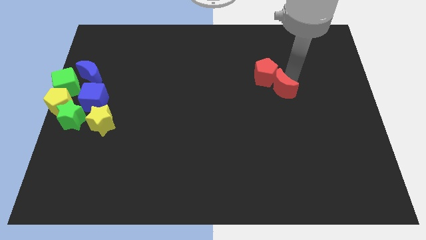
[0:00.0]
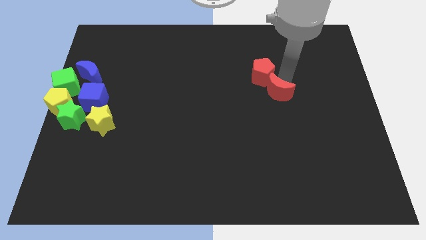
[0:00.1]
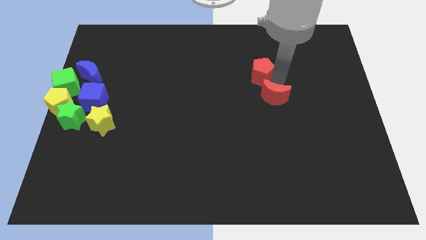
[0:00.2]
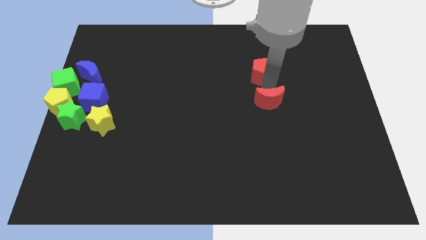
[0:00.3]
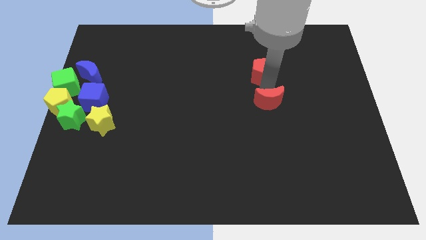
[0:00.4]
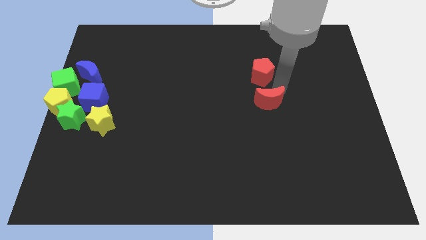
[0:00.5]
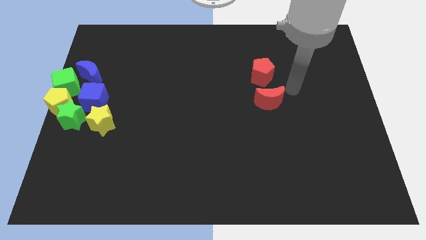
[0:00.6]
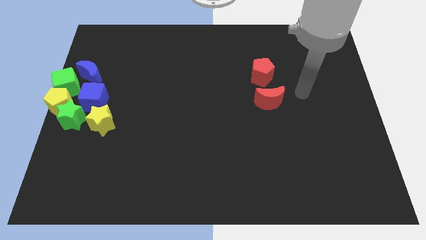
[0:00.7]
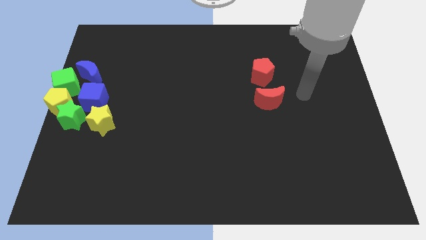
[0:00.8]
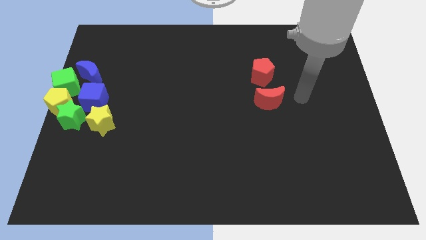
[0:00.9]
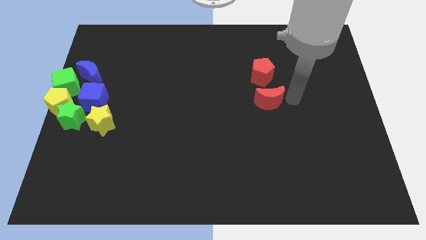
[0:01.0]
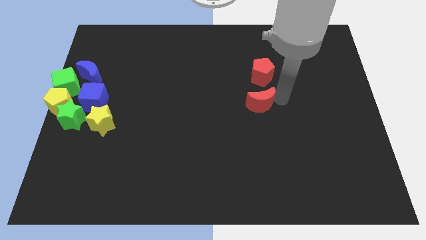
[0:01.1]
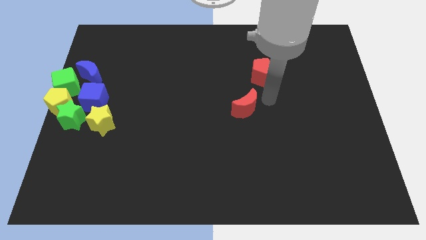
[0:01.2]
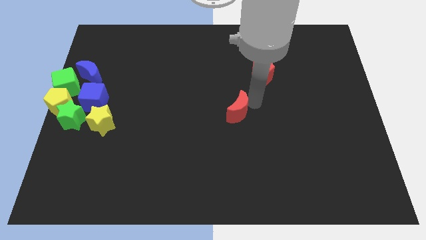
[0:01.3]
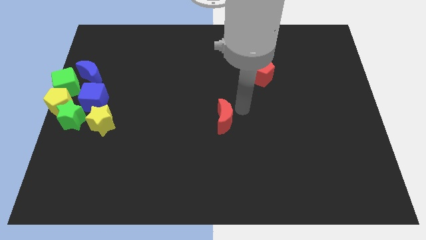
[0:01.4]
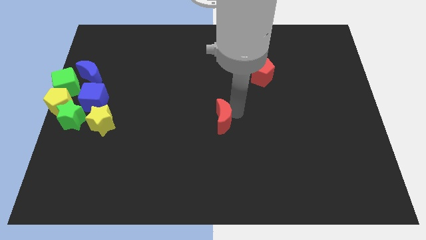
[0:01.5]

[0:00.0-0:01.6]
separate the red crescent from the red pentagon

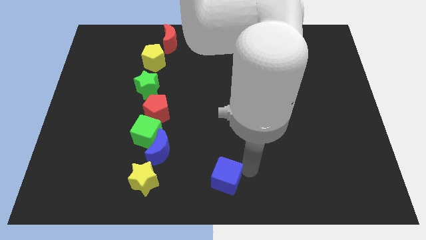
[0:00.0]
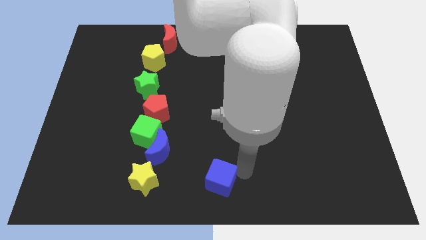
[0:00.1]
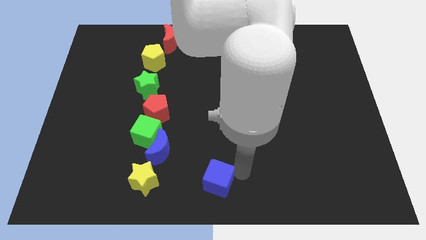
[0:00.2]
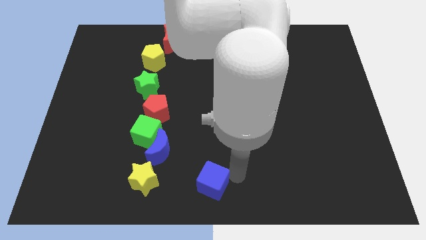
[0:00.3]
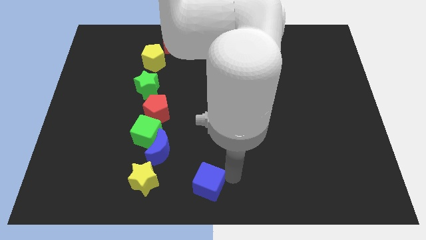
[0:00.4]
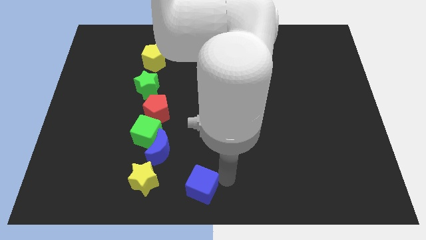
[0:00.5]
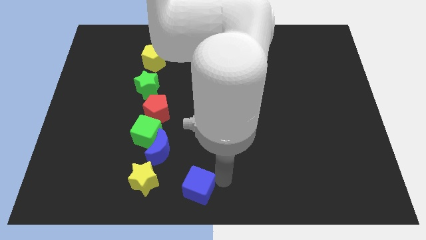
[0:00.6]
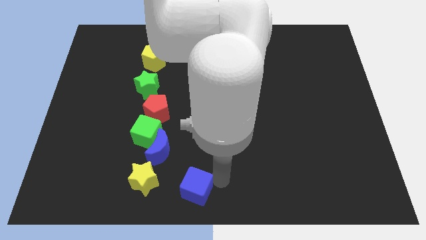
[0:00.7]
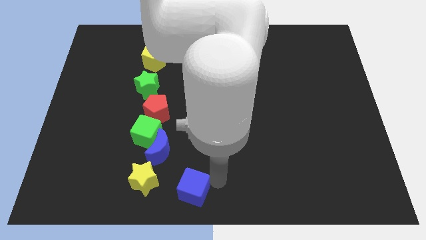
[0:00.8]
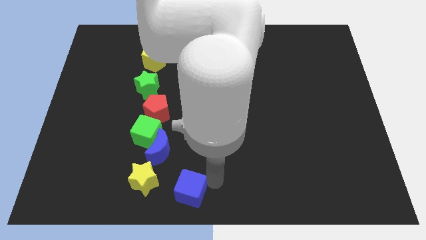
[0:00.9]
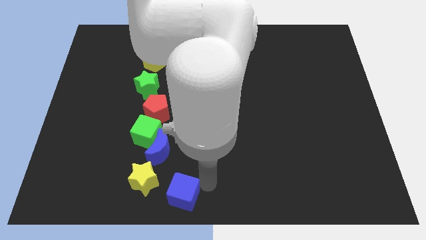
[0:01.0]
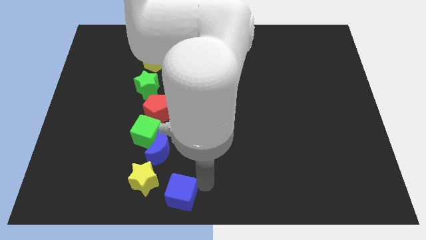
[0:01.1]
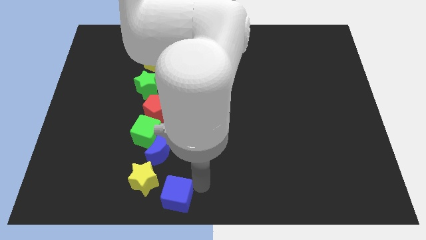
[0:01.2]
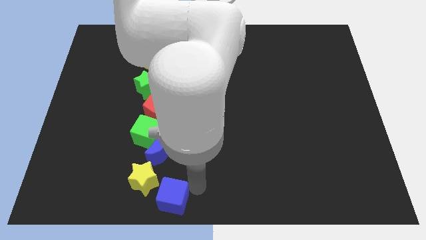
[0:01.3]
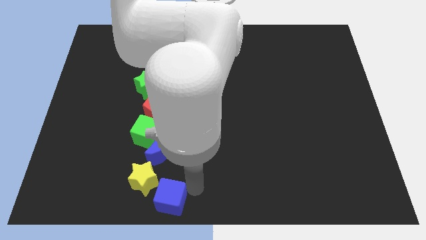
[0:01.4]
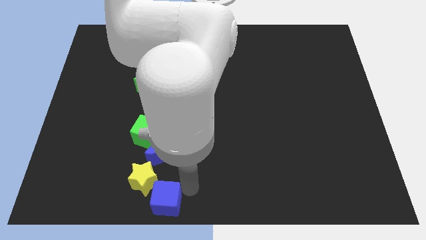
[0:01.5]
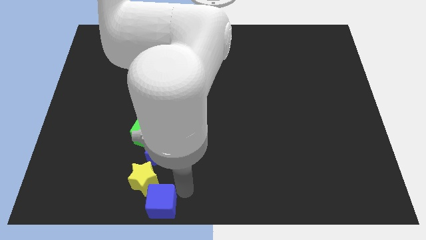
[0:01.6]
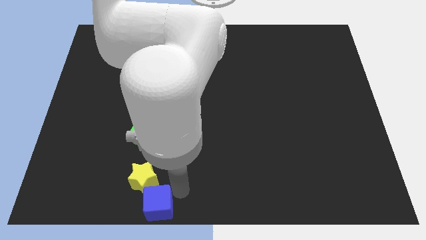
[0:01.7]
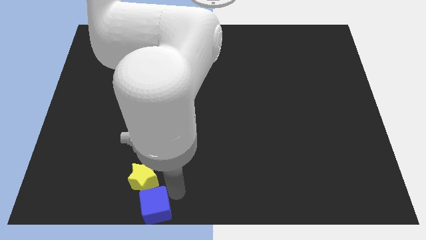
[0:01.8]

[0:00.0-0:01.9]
push the blue cube and place it below the yellow star

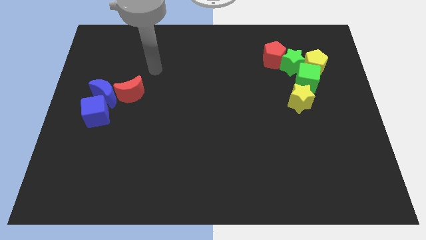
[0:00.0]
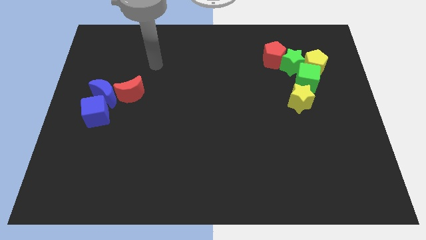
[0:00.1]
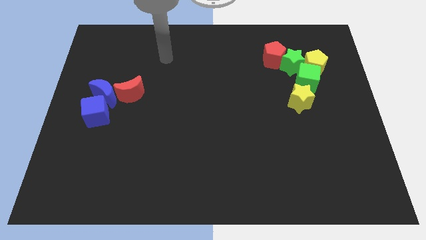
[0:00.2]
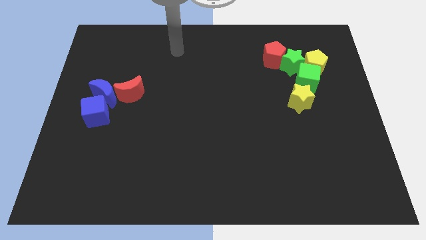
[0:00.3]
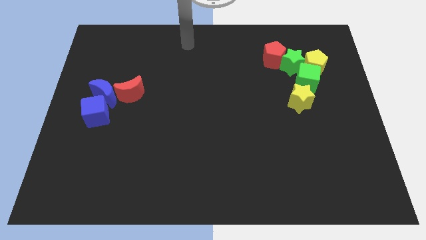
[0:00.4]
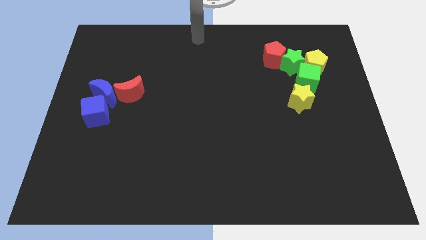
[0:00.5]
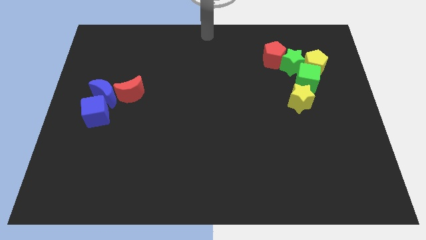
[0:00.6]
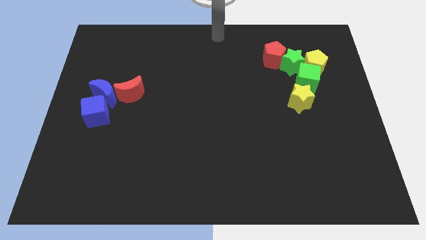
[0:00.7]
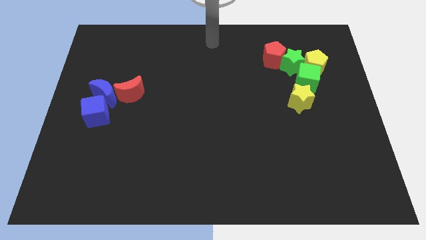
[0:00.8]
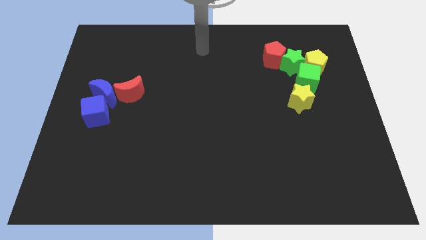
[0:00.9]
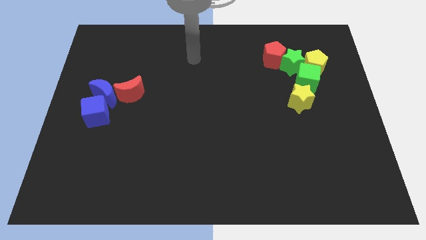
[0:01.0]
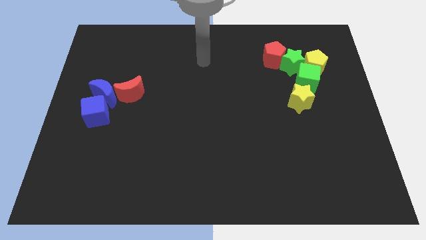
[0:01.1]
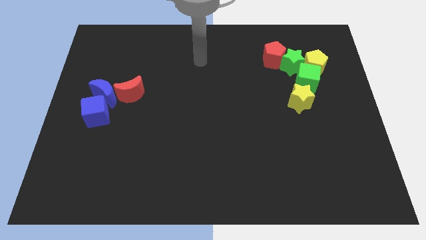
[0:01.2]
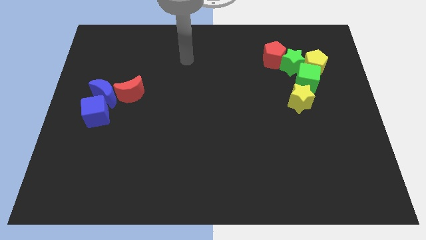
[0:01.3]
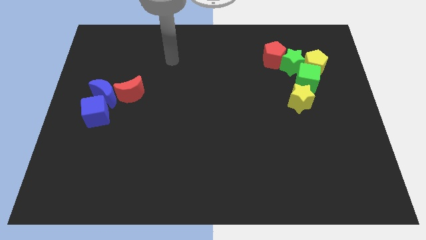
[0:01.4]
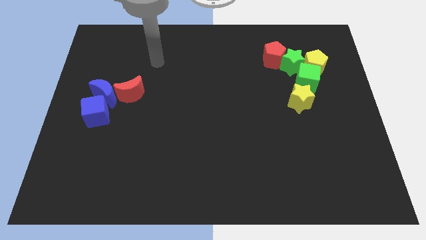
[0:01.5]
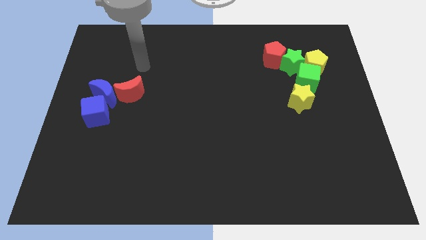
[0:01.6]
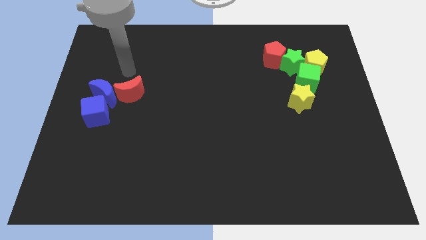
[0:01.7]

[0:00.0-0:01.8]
point the arm at the top of the red moon

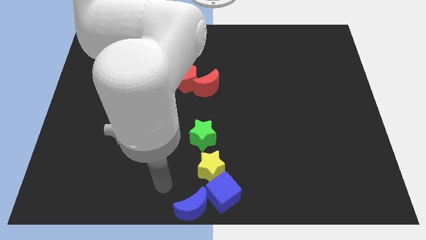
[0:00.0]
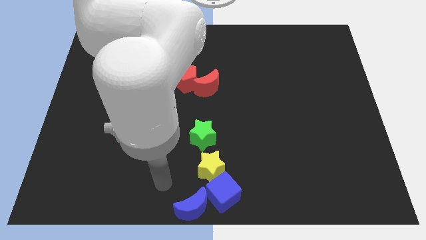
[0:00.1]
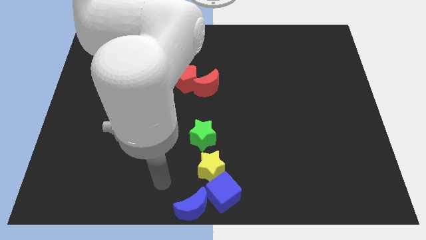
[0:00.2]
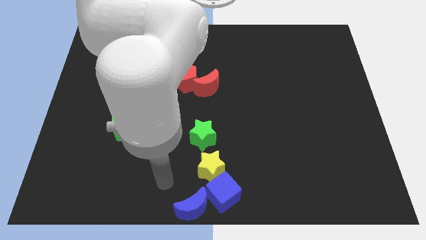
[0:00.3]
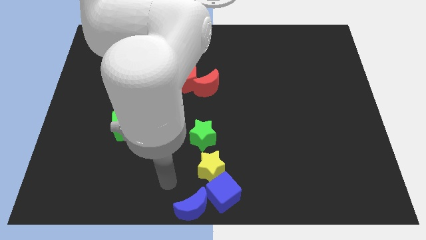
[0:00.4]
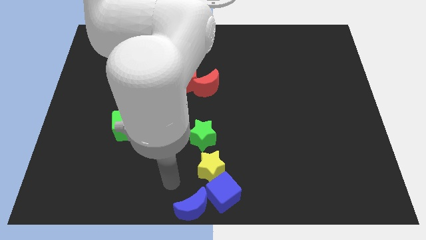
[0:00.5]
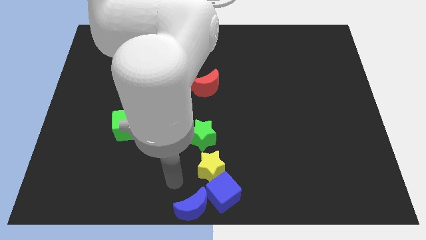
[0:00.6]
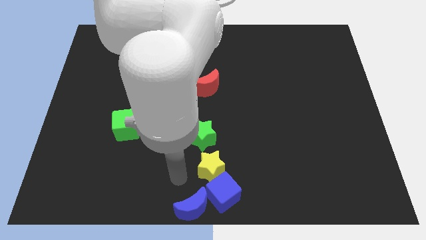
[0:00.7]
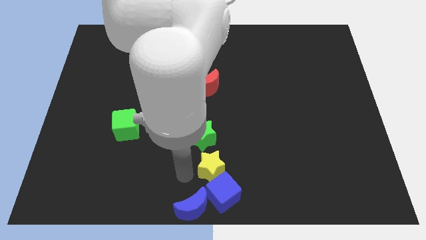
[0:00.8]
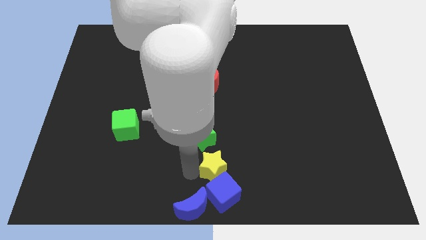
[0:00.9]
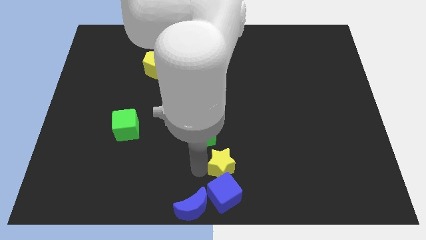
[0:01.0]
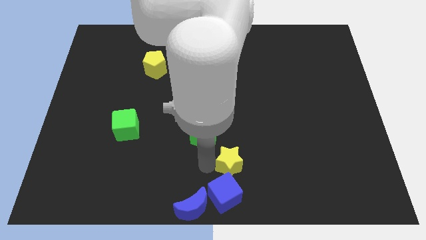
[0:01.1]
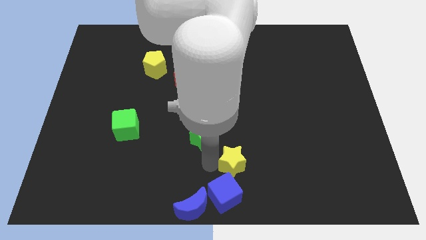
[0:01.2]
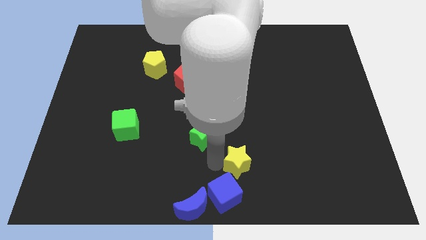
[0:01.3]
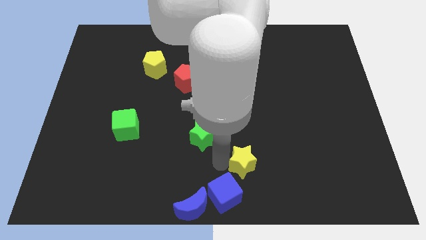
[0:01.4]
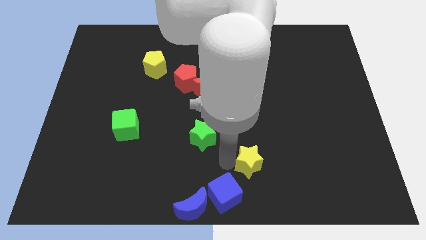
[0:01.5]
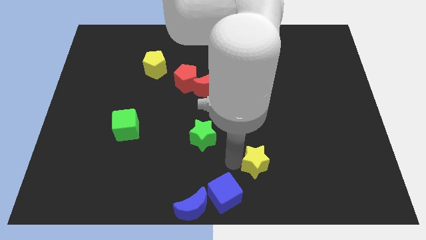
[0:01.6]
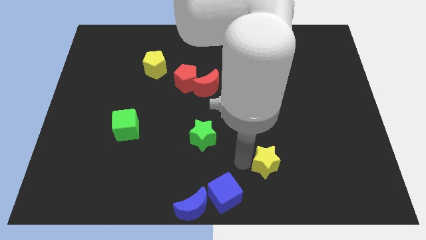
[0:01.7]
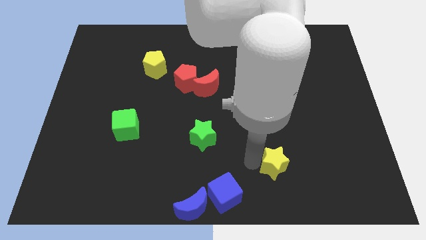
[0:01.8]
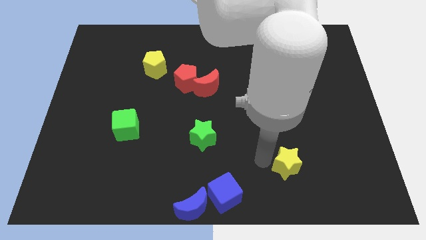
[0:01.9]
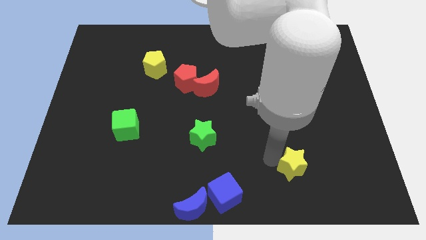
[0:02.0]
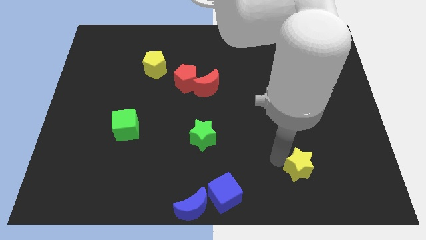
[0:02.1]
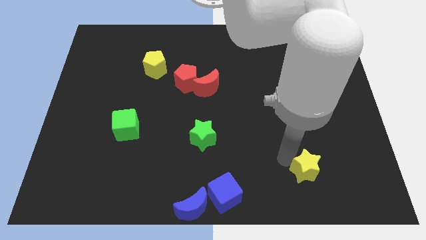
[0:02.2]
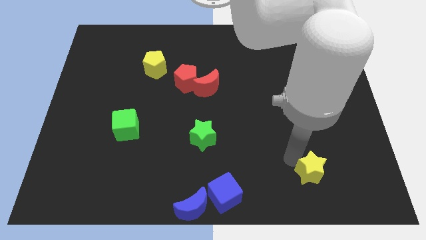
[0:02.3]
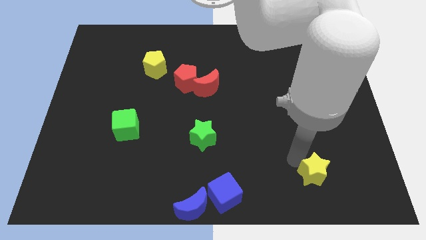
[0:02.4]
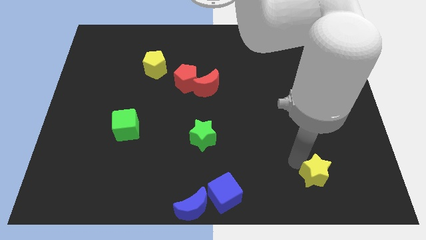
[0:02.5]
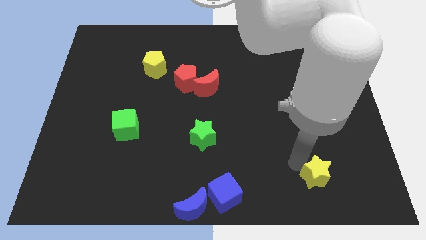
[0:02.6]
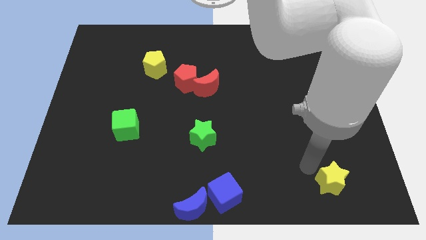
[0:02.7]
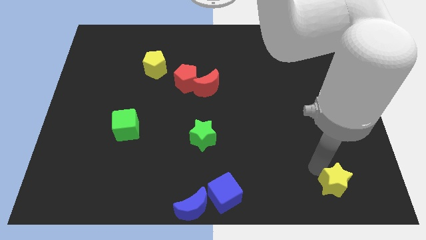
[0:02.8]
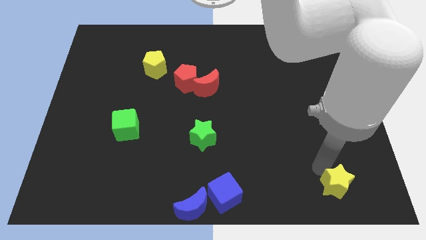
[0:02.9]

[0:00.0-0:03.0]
separate yellow star from blue cube

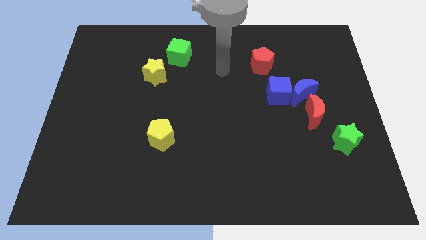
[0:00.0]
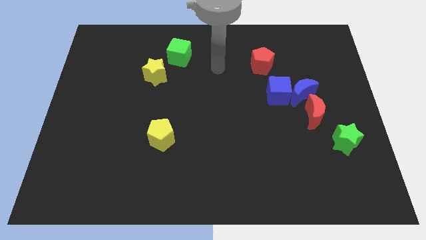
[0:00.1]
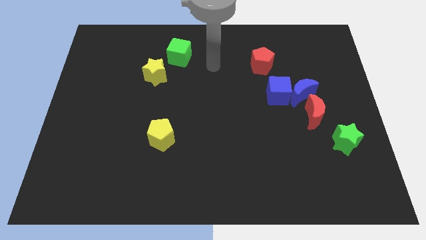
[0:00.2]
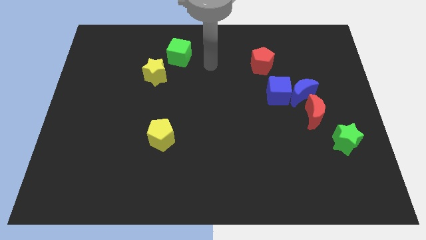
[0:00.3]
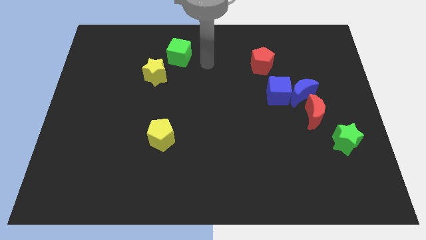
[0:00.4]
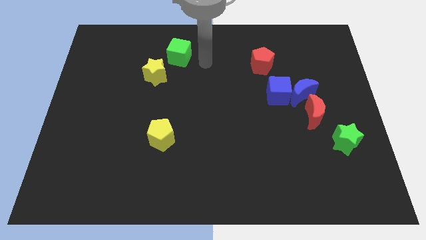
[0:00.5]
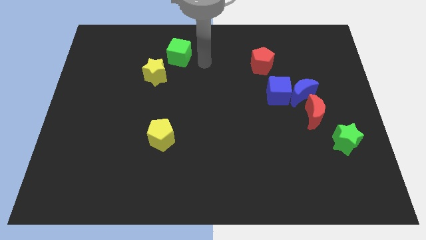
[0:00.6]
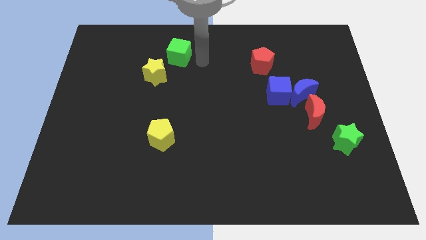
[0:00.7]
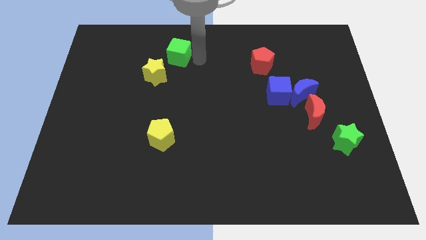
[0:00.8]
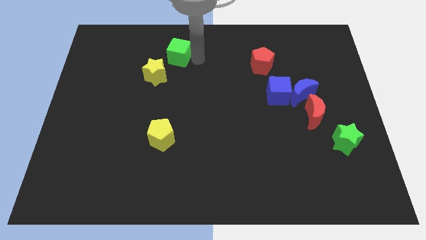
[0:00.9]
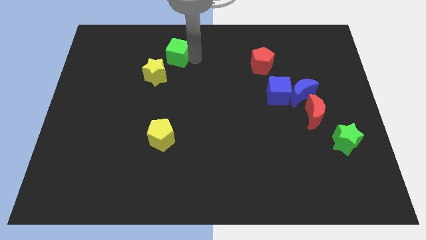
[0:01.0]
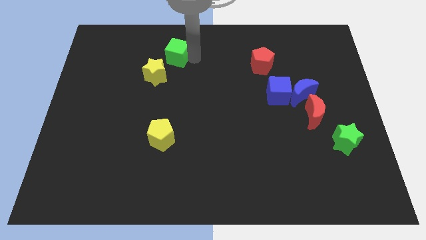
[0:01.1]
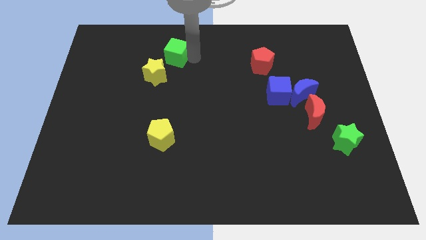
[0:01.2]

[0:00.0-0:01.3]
move your arm to the right side of the green cube
